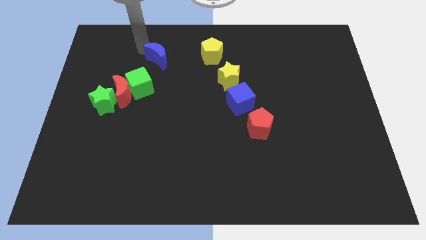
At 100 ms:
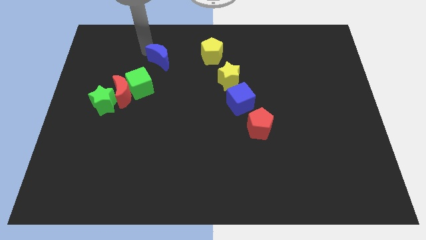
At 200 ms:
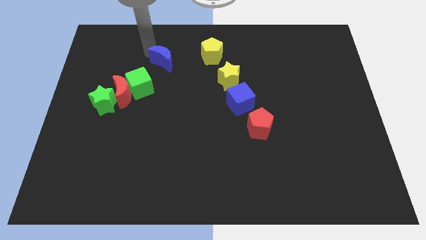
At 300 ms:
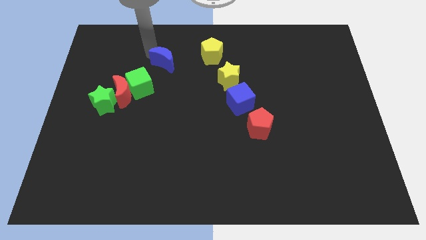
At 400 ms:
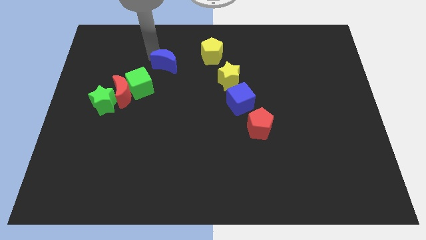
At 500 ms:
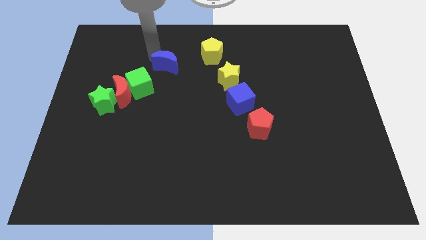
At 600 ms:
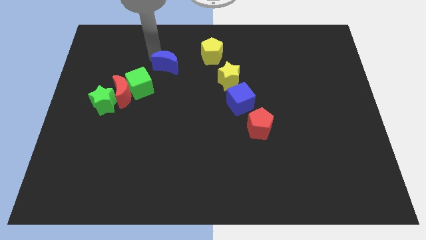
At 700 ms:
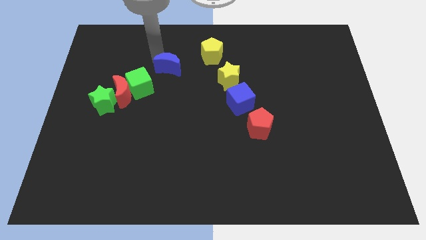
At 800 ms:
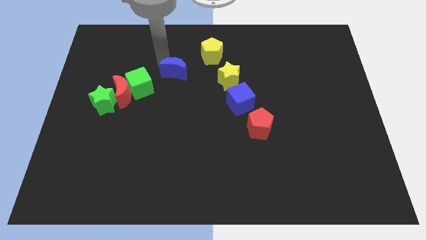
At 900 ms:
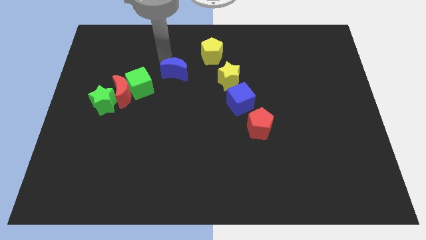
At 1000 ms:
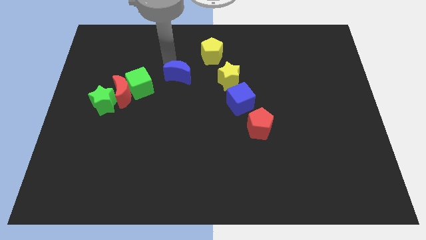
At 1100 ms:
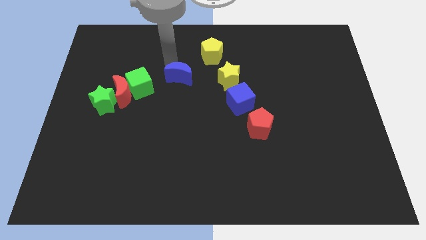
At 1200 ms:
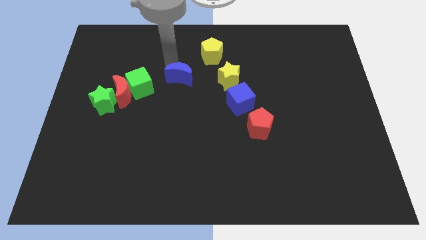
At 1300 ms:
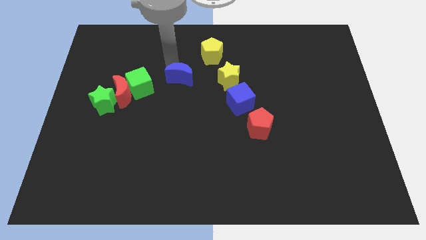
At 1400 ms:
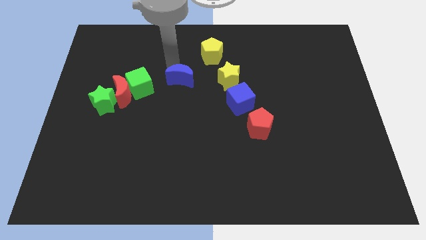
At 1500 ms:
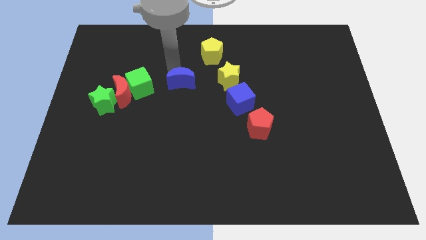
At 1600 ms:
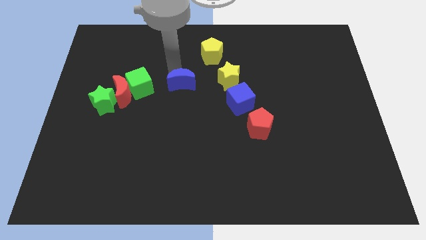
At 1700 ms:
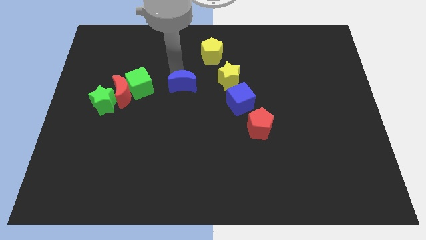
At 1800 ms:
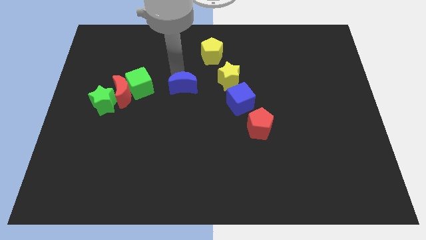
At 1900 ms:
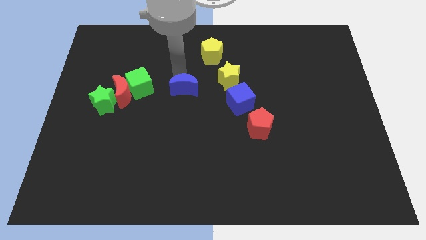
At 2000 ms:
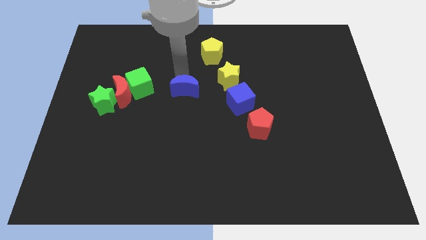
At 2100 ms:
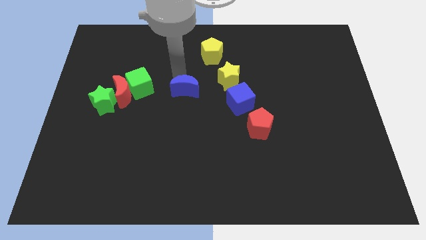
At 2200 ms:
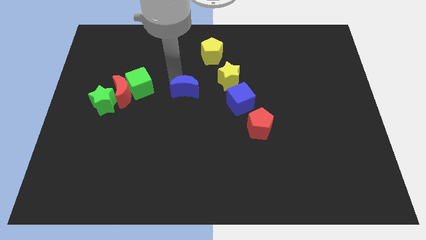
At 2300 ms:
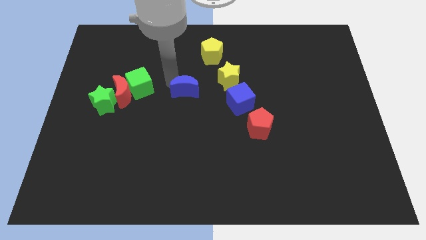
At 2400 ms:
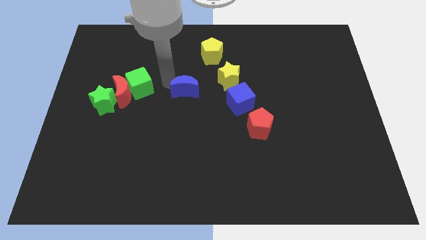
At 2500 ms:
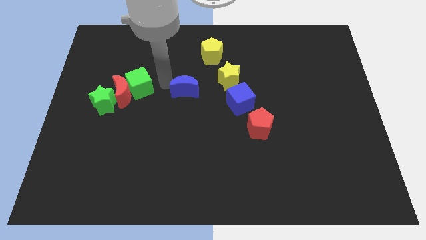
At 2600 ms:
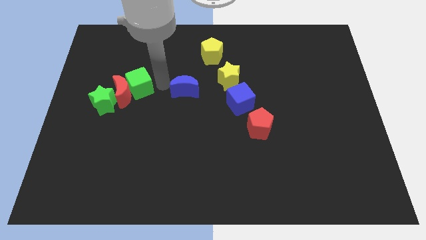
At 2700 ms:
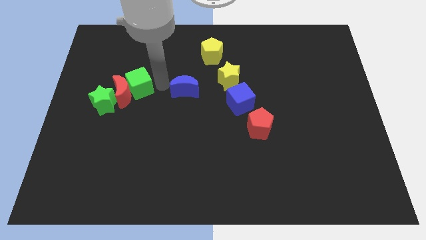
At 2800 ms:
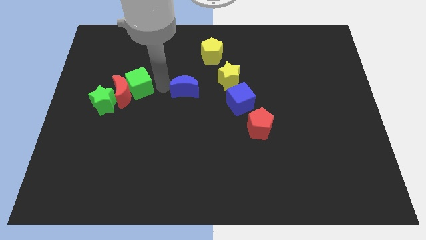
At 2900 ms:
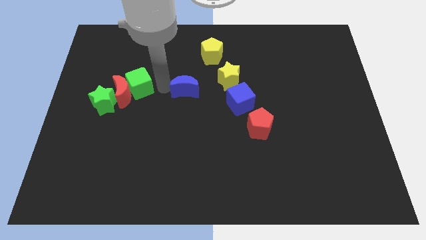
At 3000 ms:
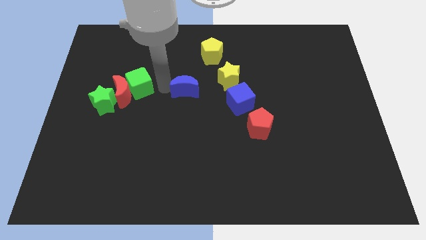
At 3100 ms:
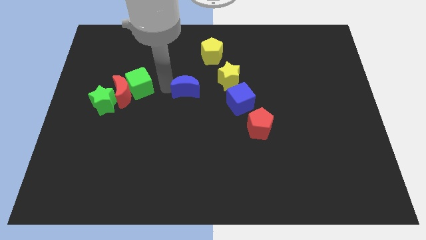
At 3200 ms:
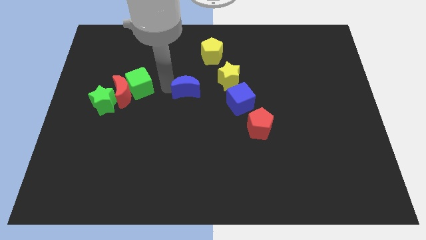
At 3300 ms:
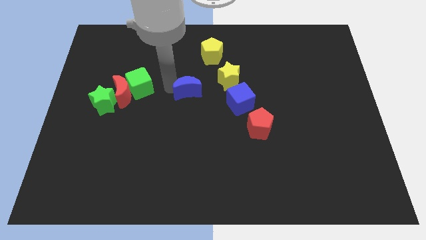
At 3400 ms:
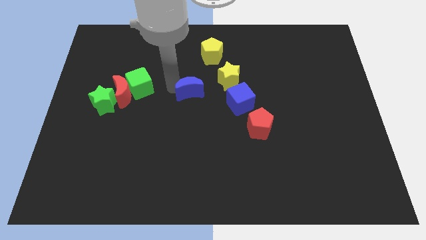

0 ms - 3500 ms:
drag the blue moon right to the green cube

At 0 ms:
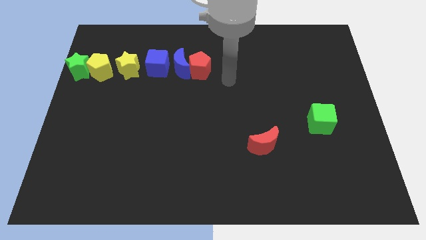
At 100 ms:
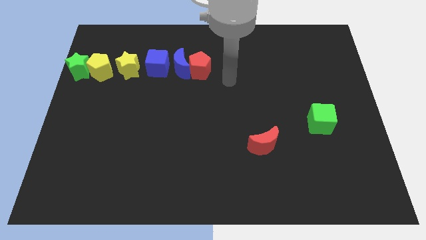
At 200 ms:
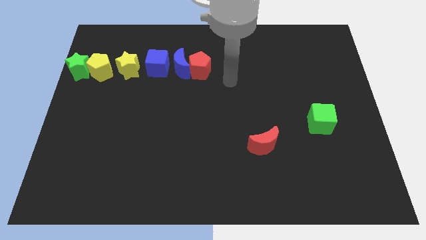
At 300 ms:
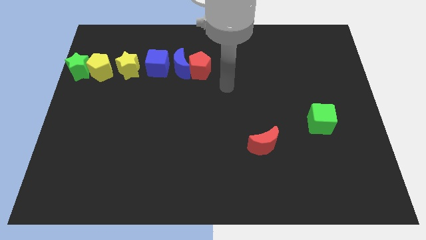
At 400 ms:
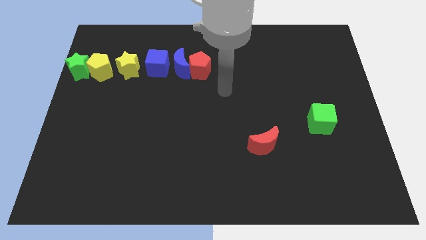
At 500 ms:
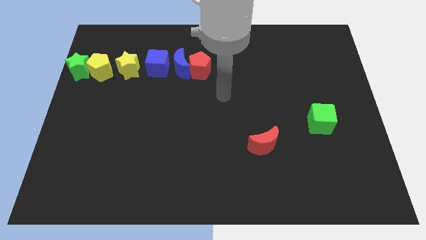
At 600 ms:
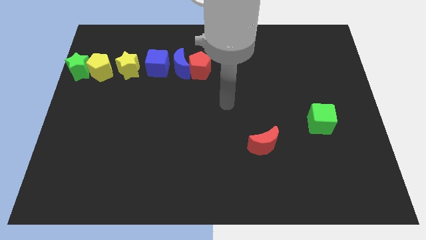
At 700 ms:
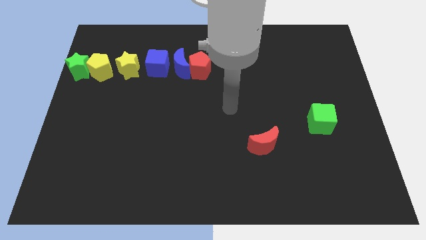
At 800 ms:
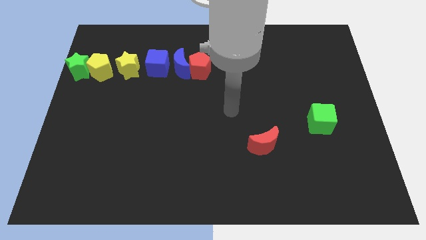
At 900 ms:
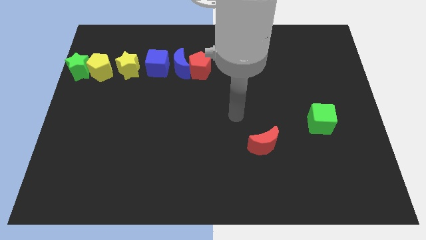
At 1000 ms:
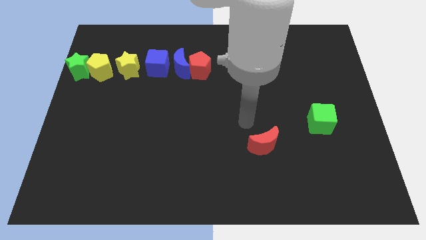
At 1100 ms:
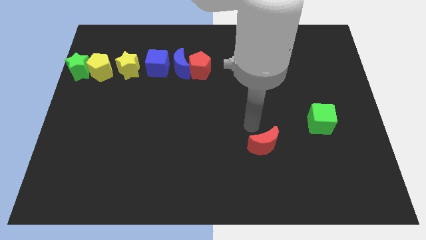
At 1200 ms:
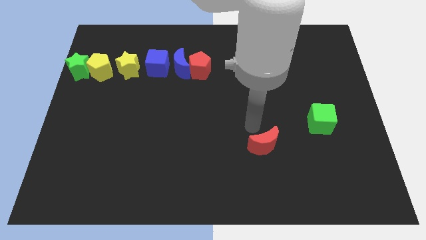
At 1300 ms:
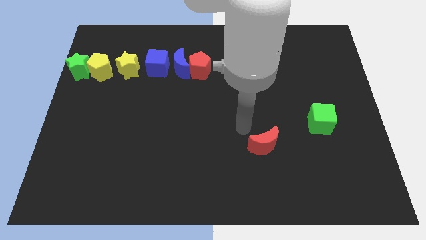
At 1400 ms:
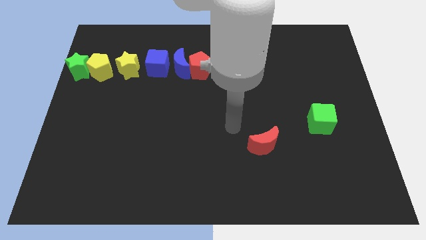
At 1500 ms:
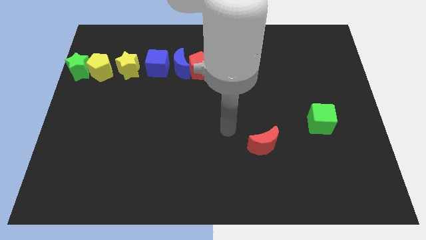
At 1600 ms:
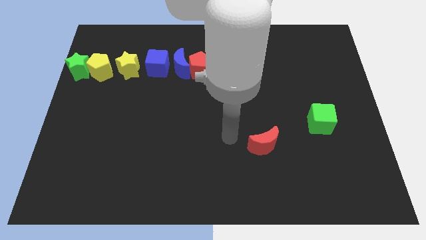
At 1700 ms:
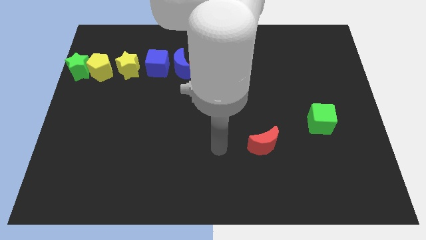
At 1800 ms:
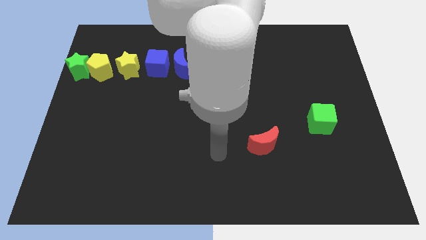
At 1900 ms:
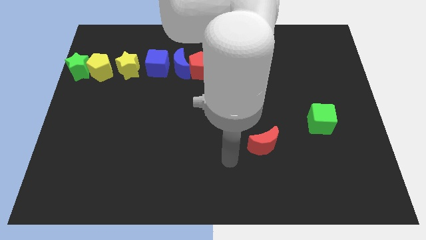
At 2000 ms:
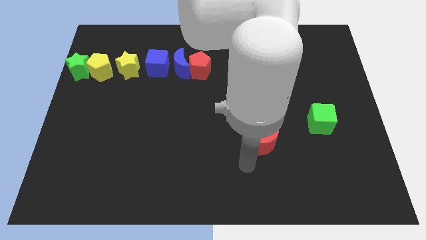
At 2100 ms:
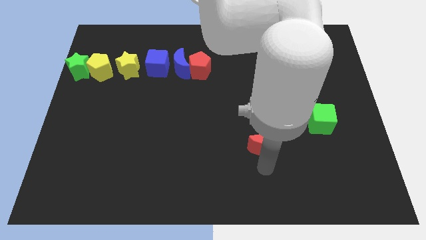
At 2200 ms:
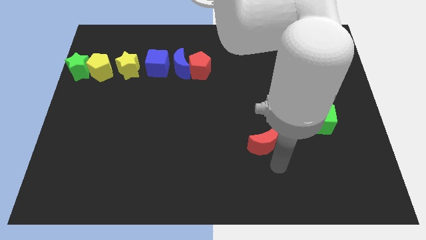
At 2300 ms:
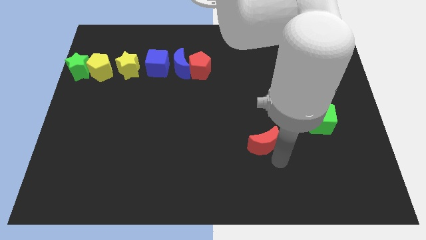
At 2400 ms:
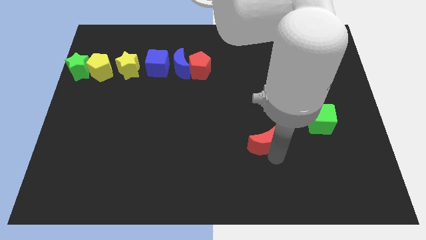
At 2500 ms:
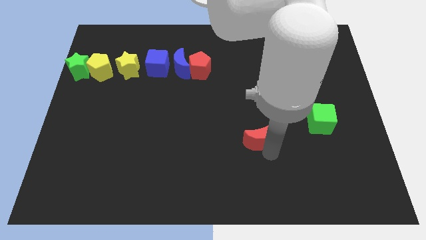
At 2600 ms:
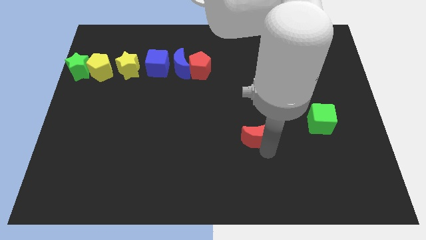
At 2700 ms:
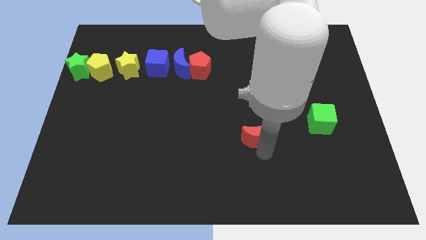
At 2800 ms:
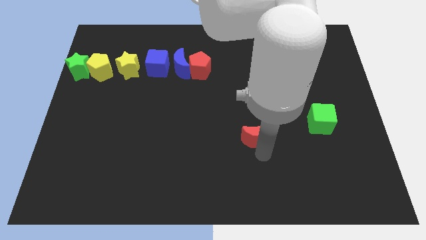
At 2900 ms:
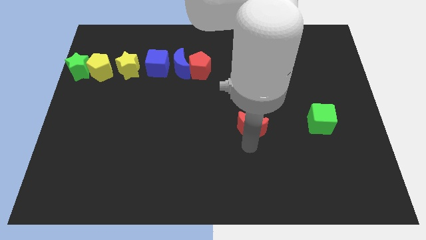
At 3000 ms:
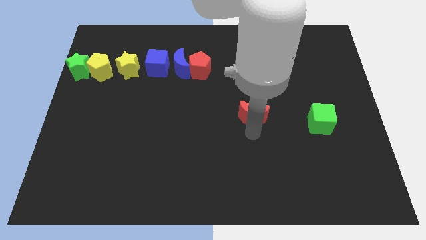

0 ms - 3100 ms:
move the red moon slightly up

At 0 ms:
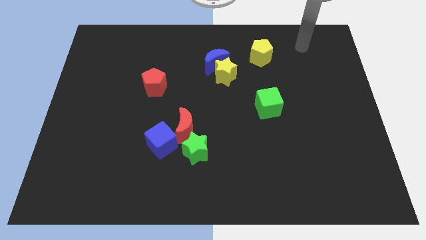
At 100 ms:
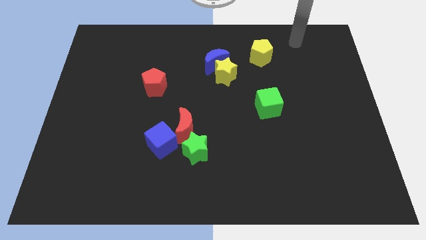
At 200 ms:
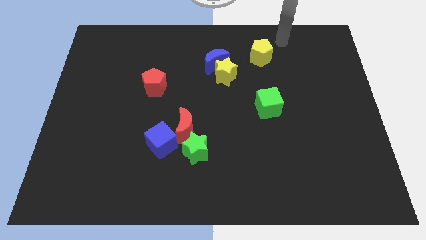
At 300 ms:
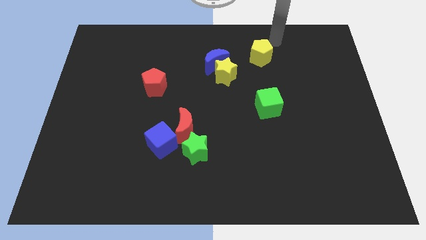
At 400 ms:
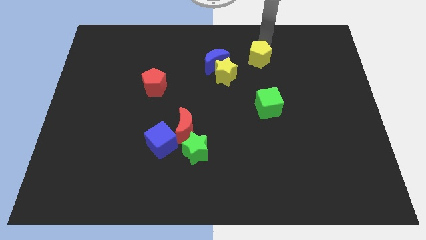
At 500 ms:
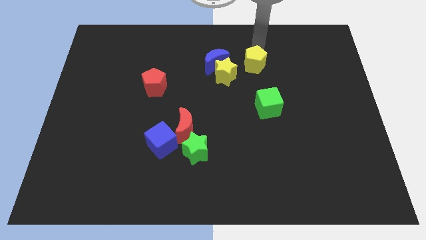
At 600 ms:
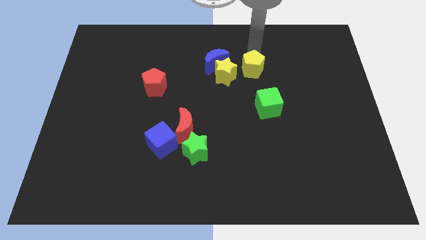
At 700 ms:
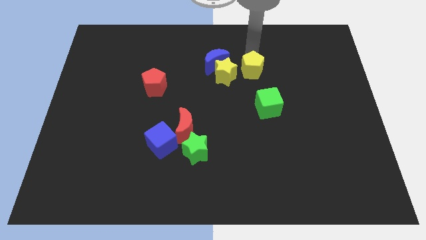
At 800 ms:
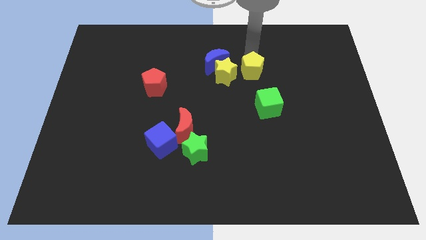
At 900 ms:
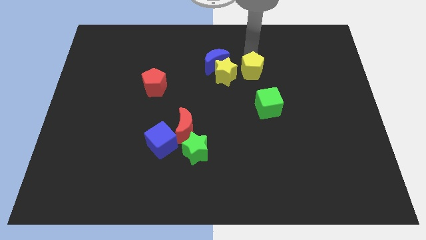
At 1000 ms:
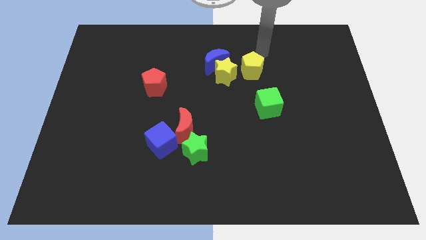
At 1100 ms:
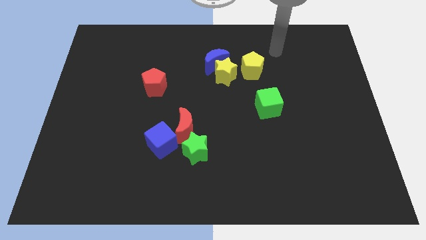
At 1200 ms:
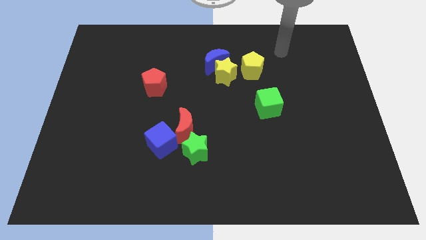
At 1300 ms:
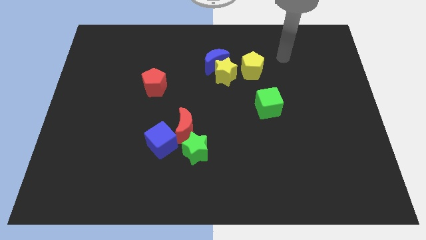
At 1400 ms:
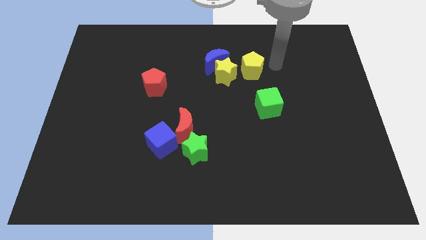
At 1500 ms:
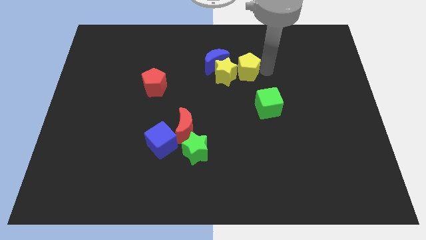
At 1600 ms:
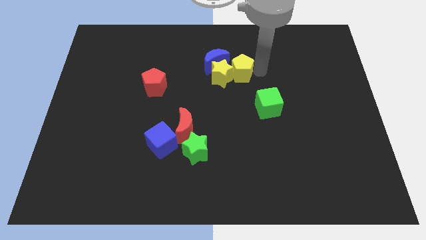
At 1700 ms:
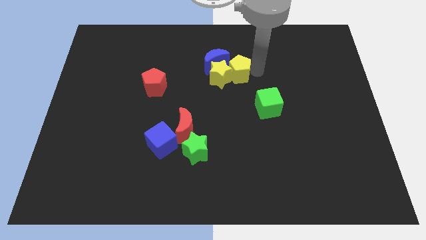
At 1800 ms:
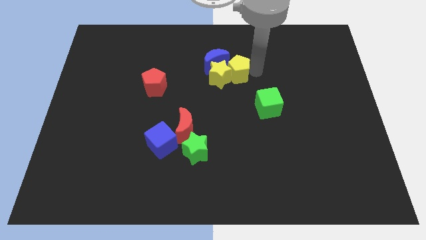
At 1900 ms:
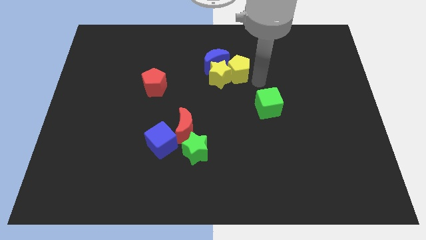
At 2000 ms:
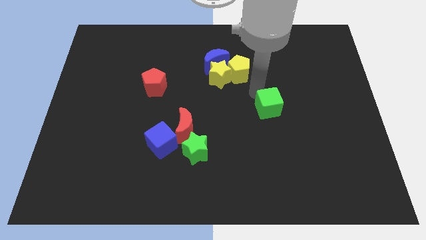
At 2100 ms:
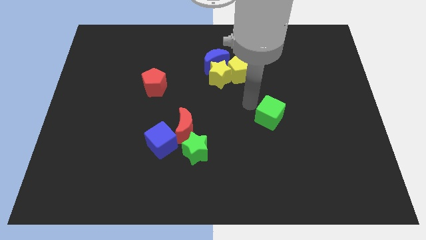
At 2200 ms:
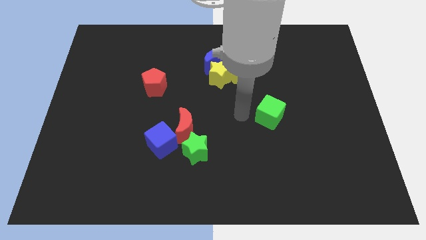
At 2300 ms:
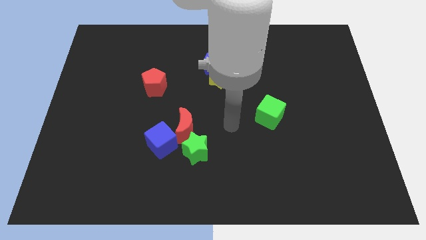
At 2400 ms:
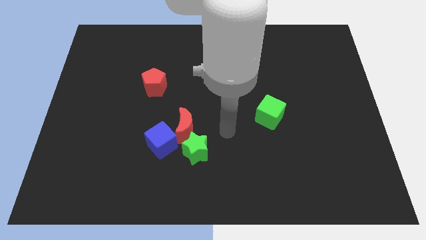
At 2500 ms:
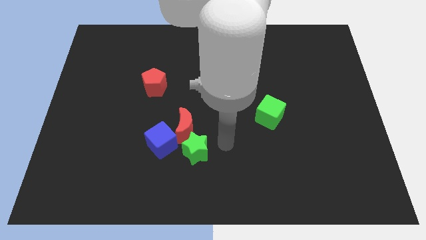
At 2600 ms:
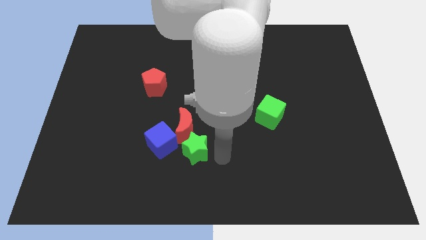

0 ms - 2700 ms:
move the yellow pentagon into yellow star to the right
